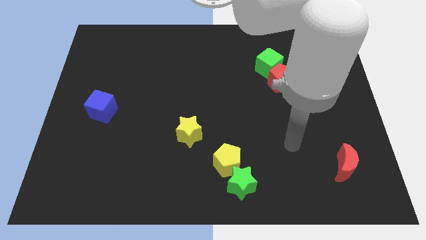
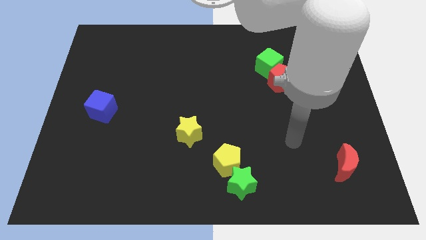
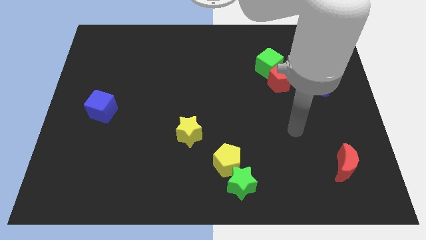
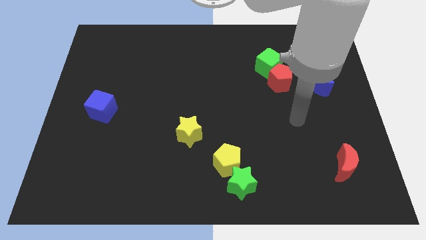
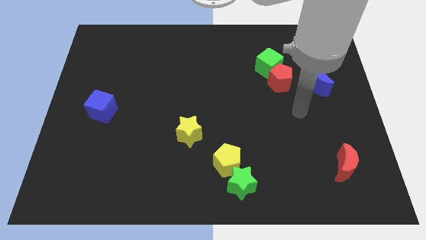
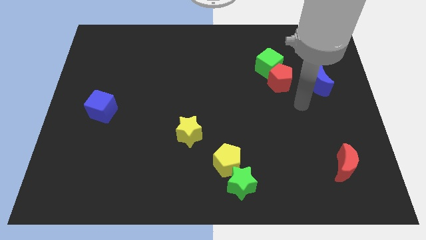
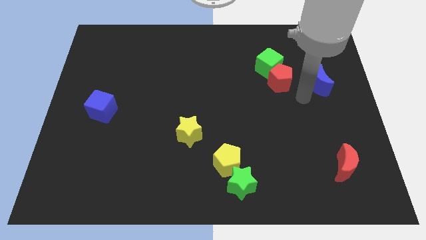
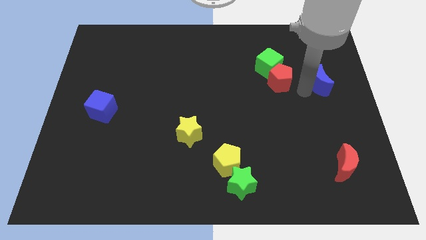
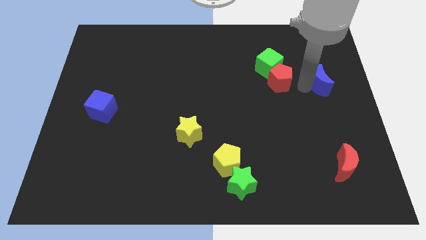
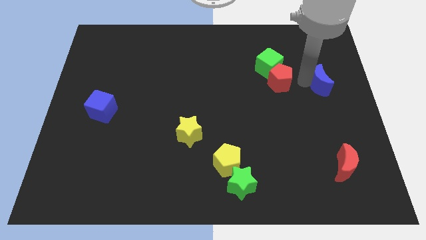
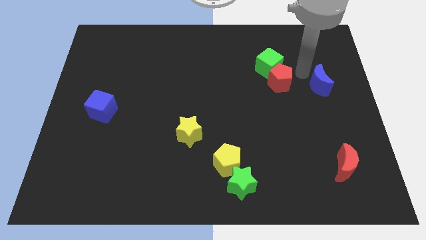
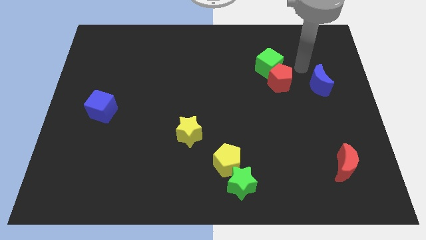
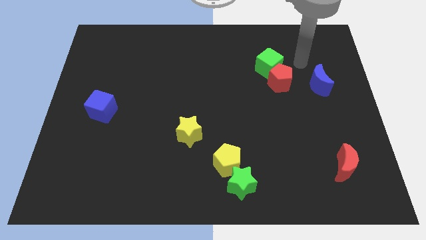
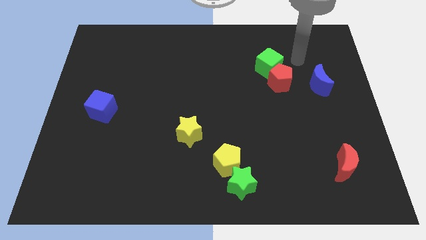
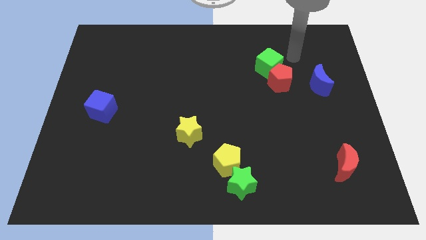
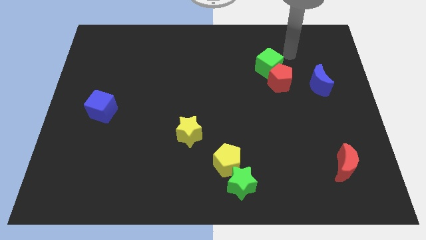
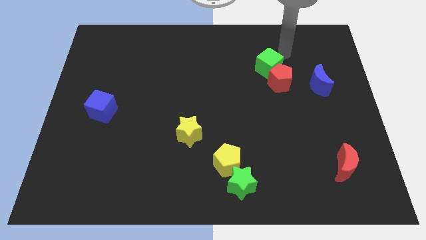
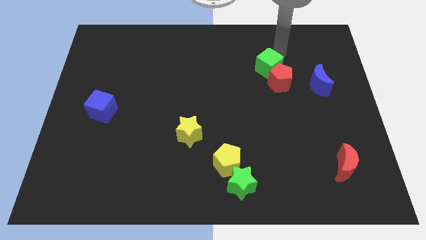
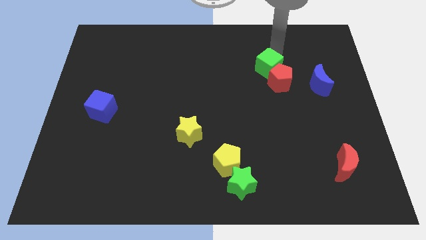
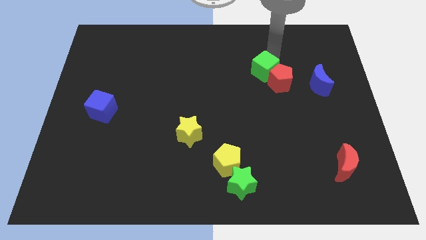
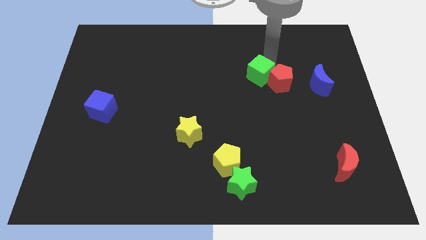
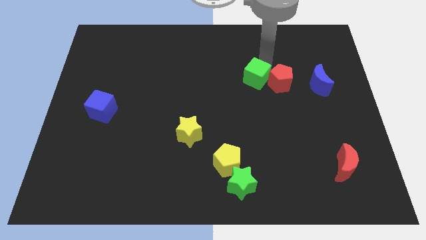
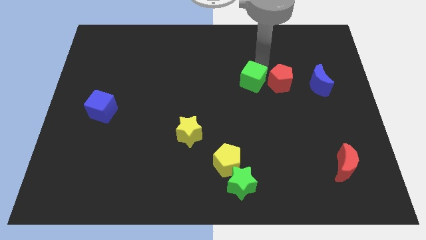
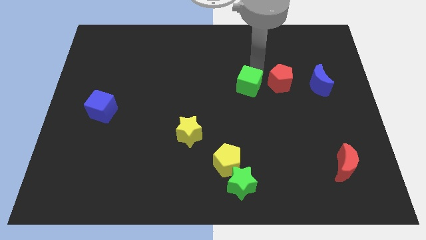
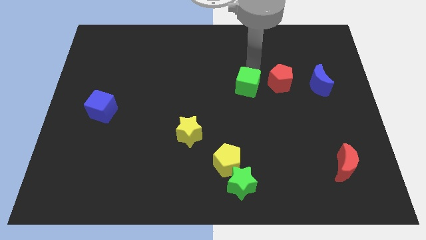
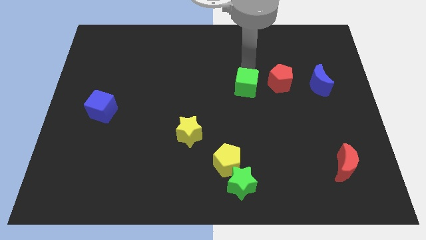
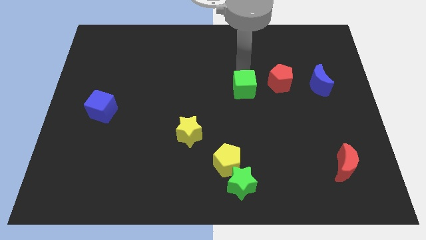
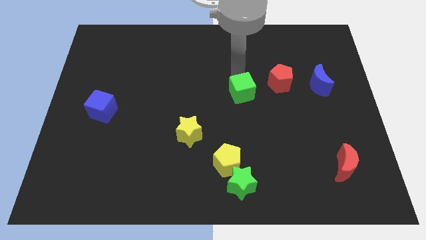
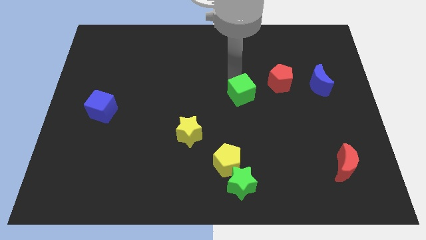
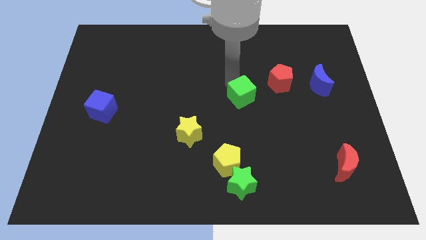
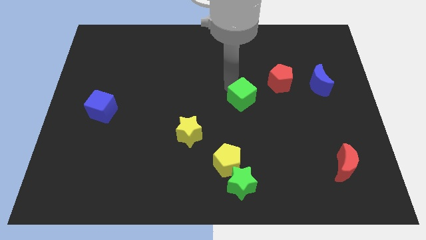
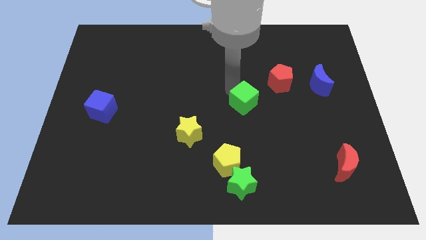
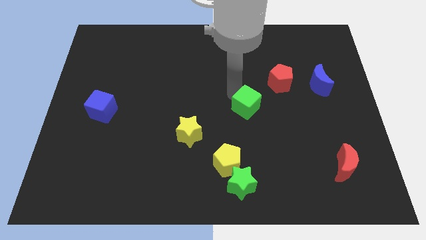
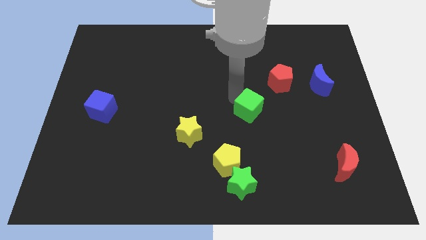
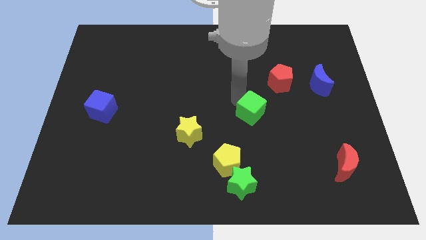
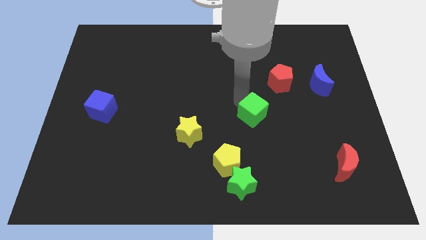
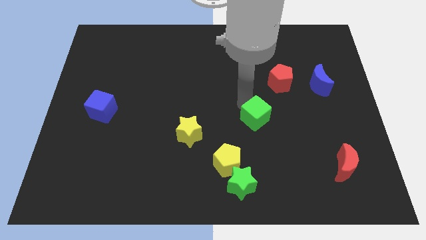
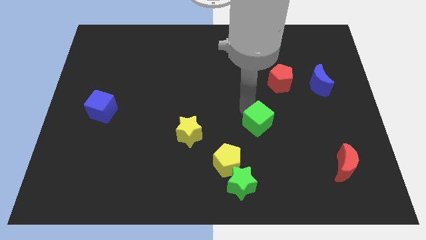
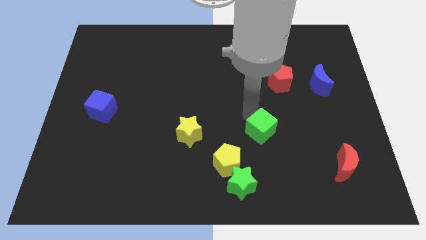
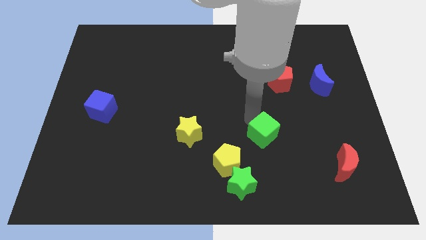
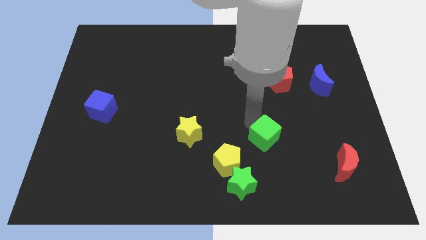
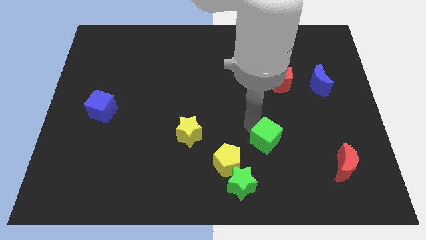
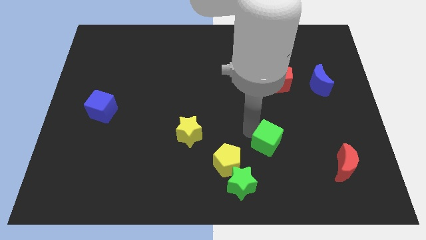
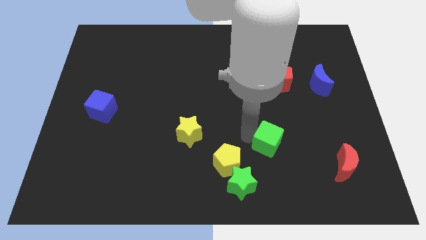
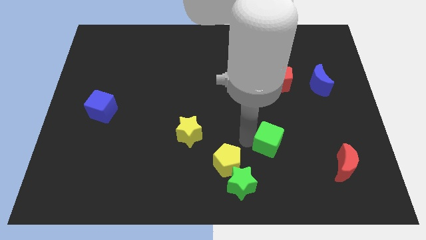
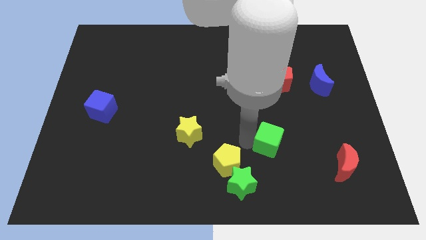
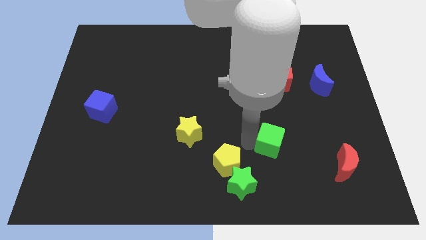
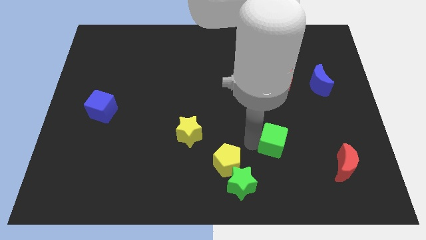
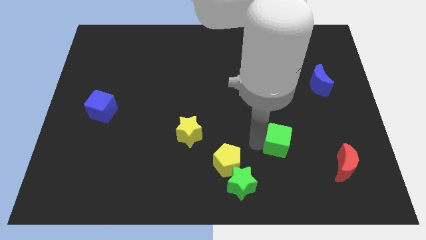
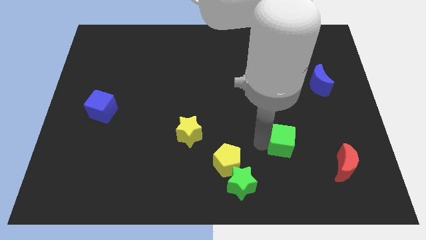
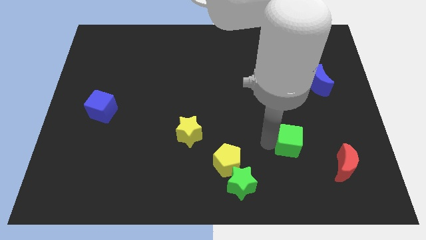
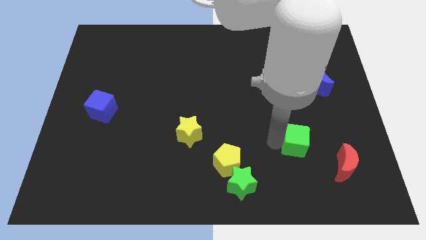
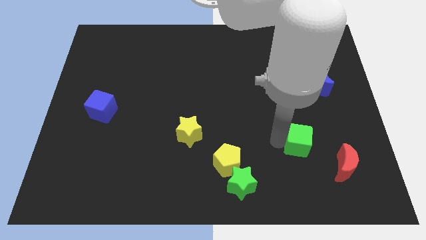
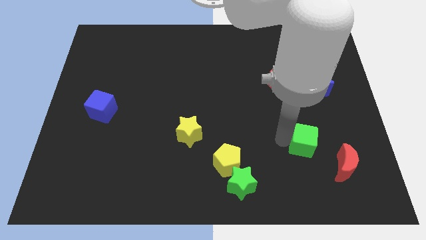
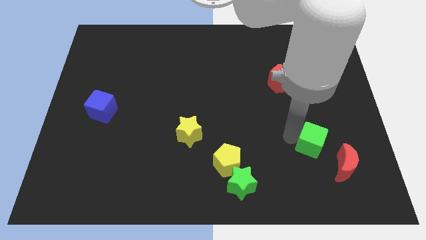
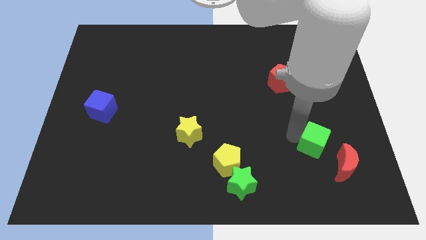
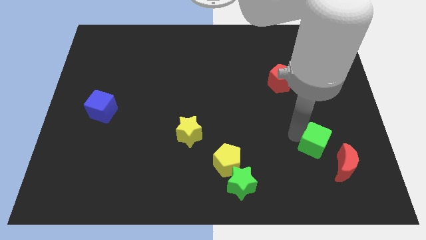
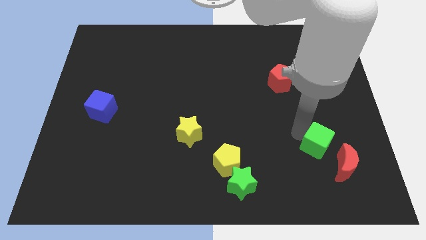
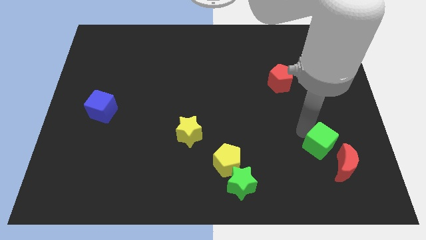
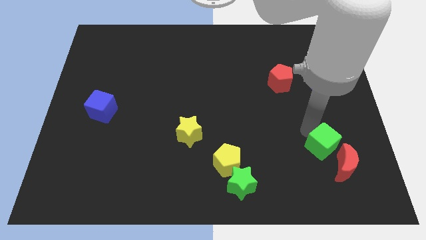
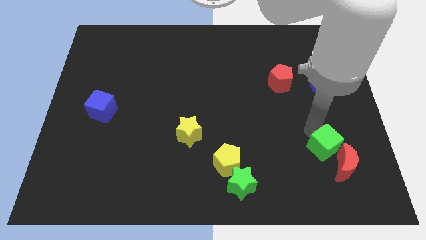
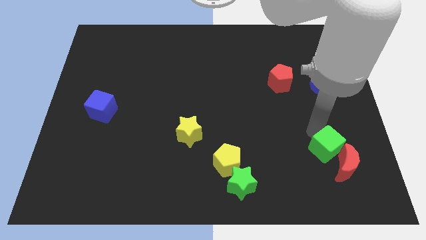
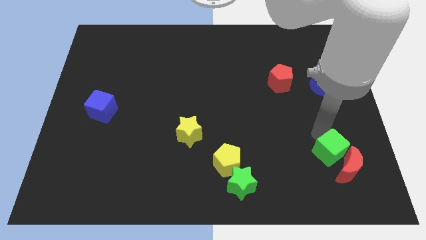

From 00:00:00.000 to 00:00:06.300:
push the green cube close to the red moon

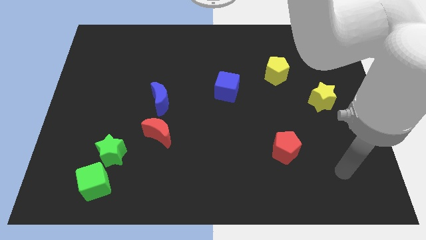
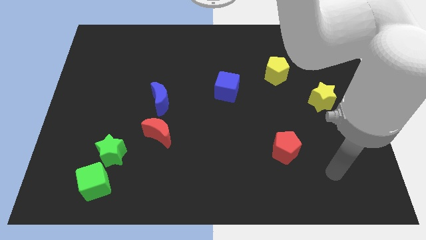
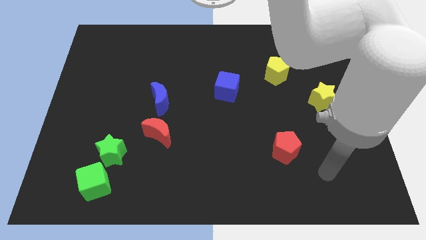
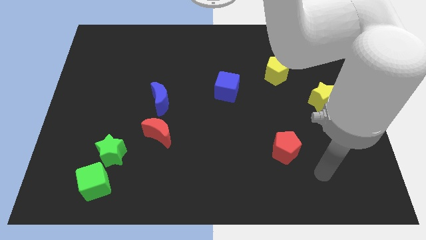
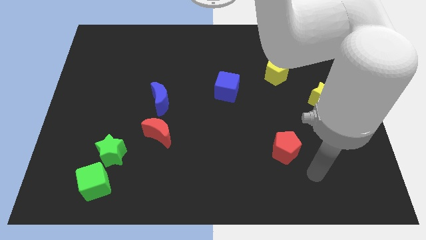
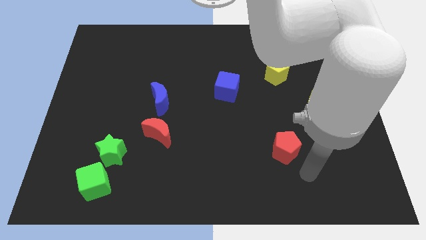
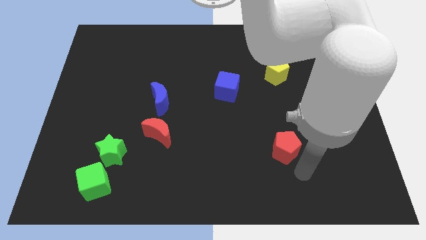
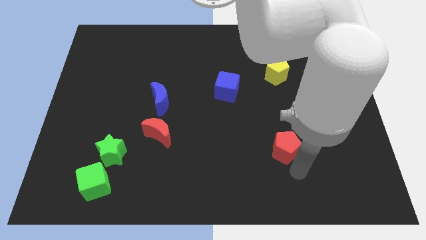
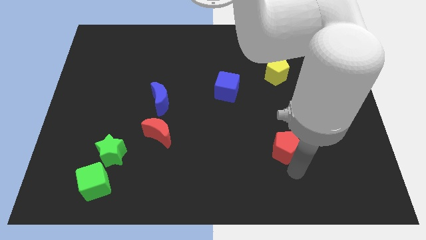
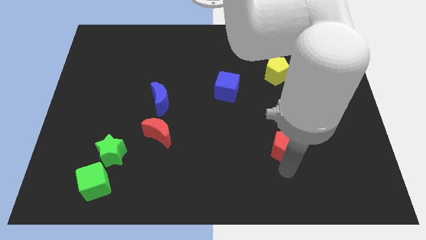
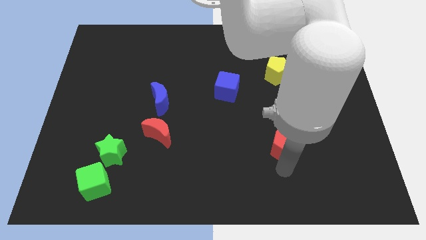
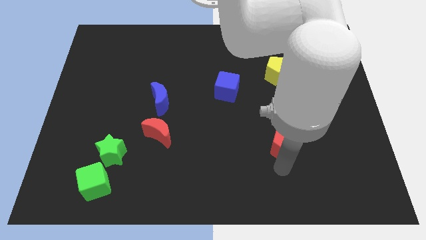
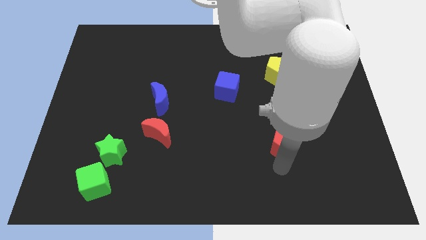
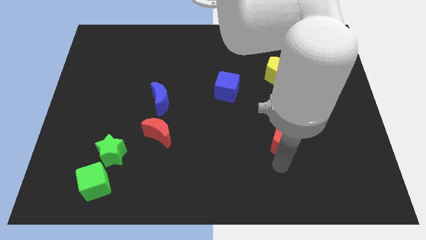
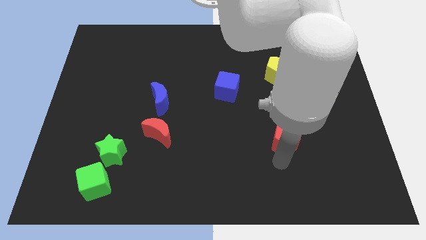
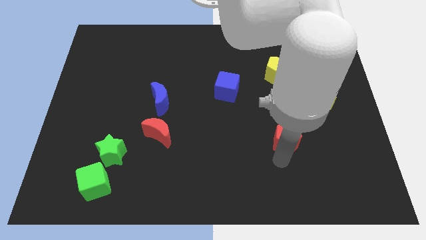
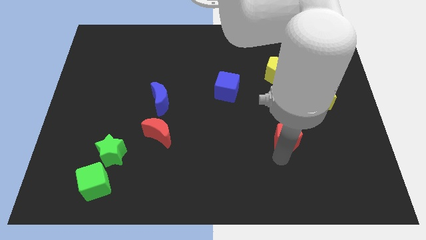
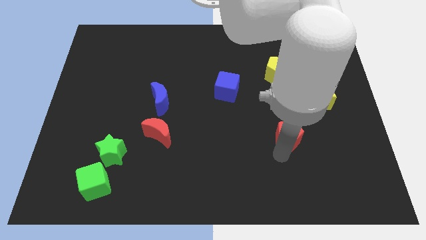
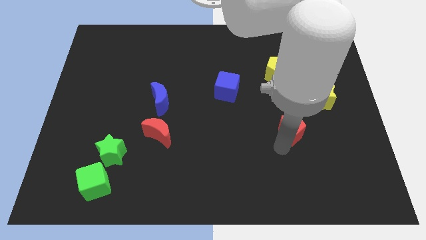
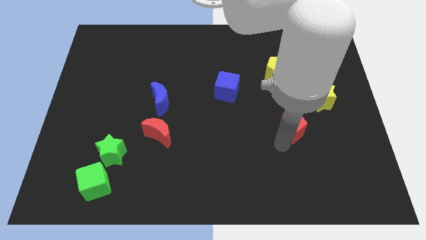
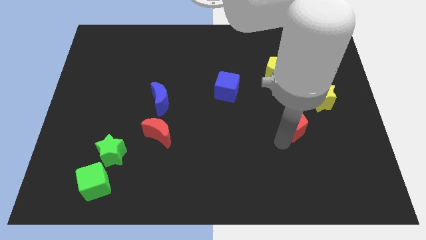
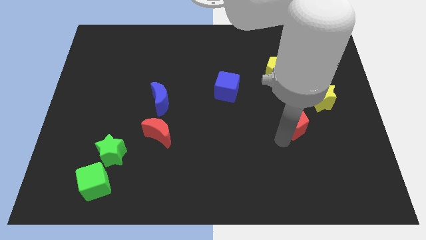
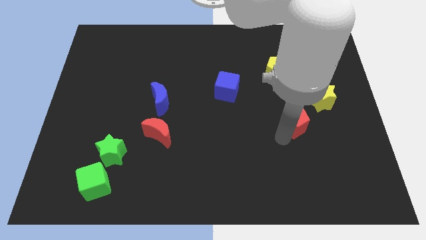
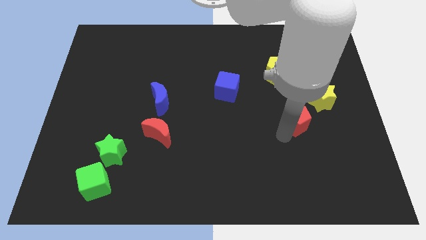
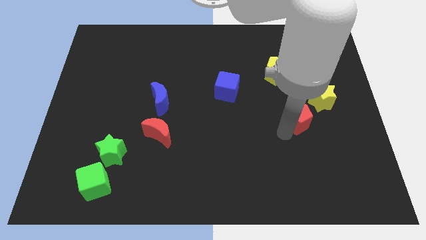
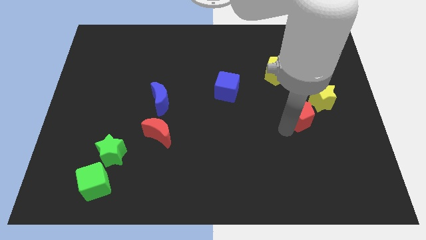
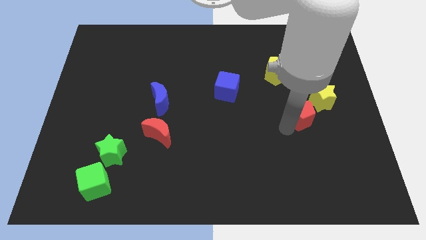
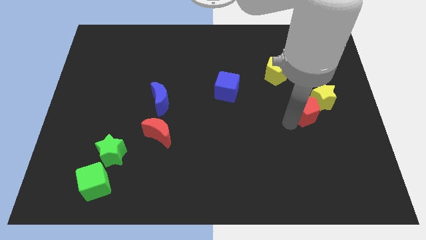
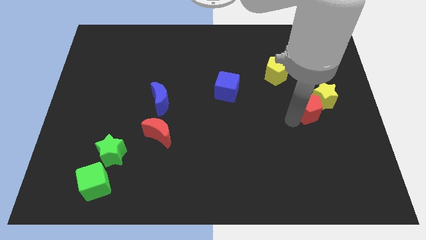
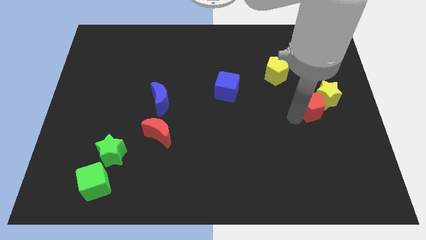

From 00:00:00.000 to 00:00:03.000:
put the red pentagon to the yellow star
